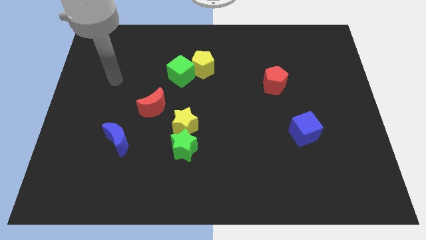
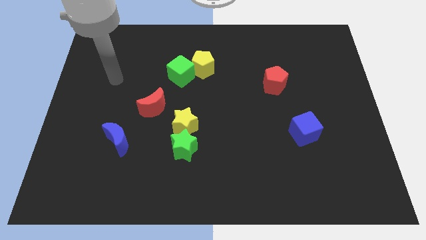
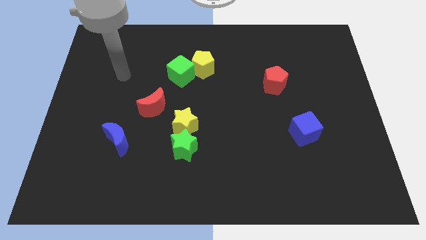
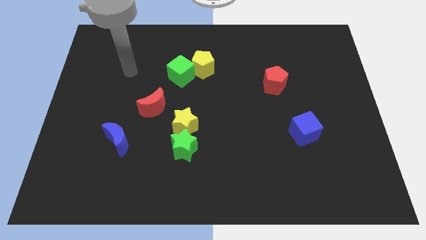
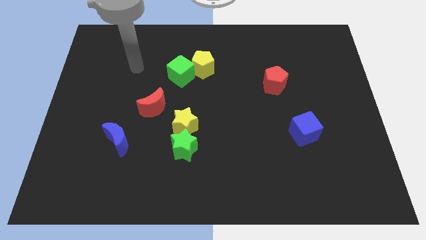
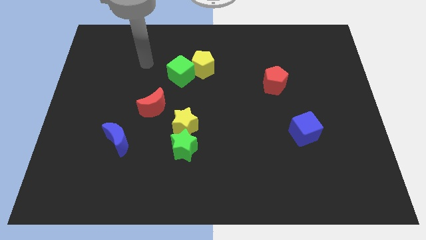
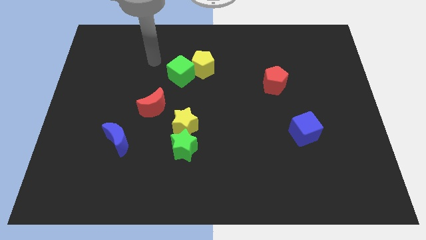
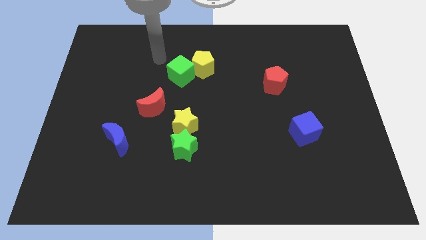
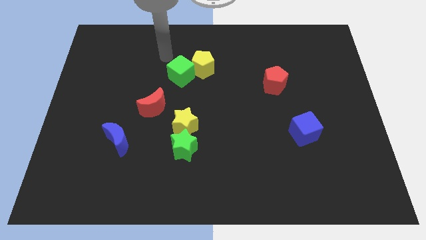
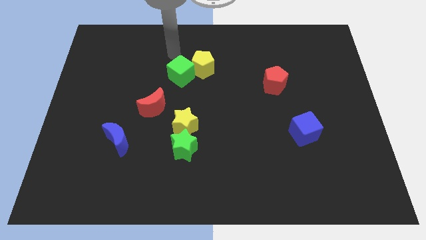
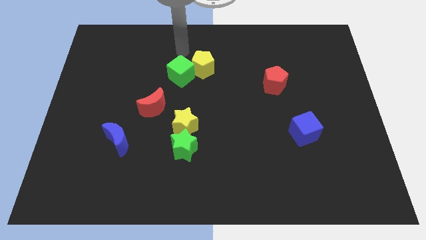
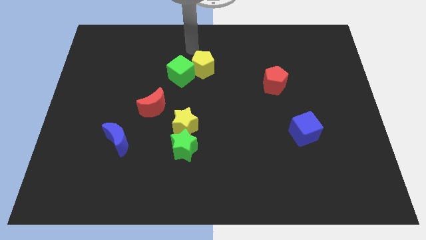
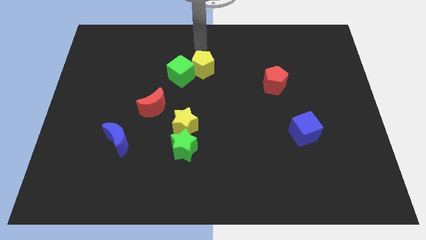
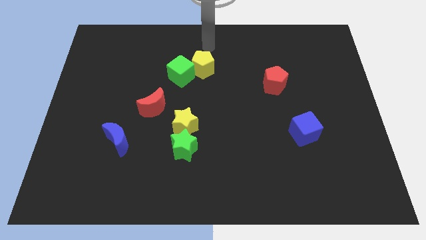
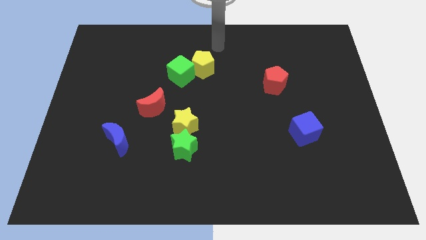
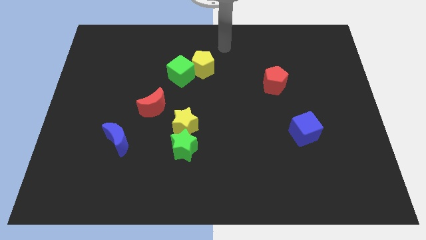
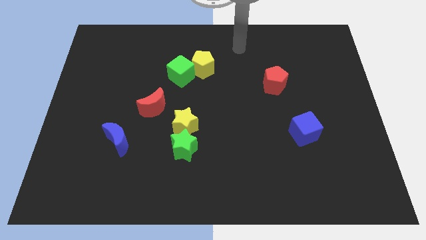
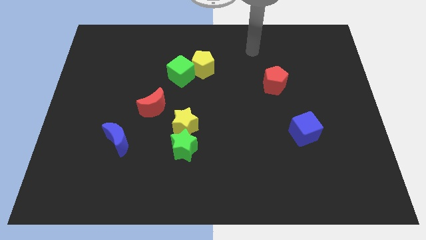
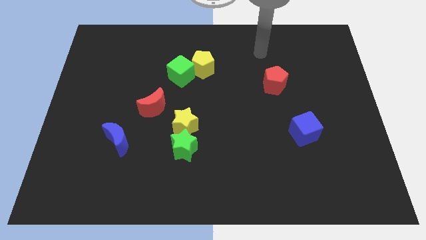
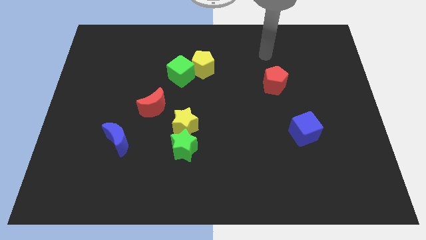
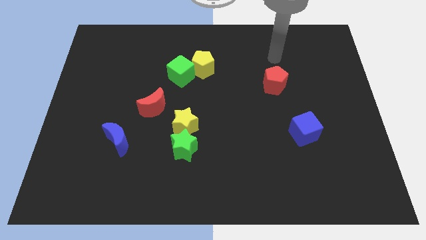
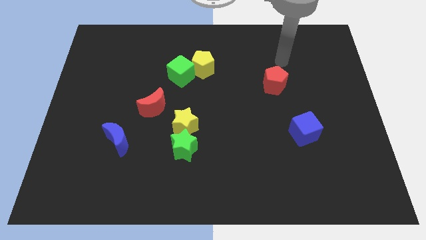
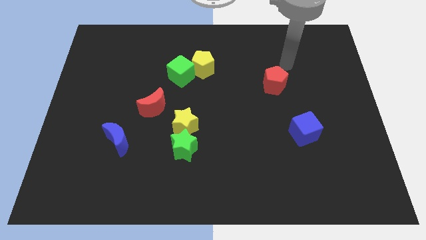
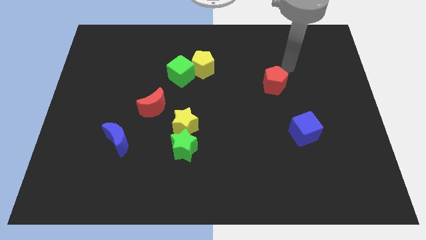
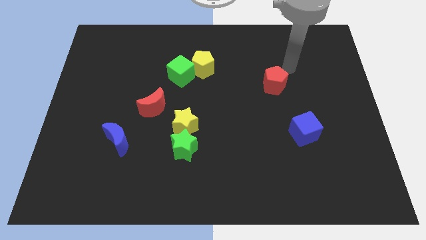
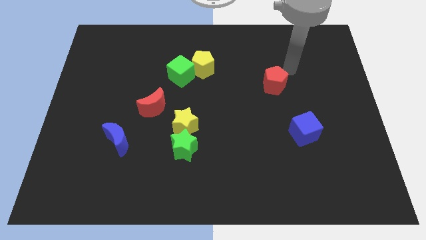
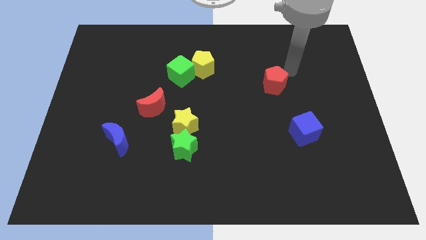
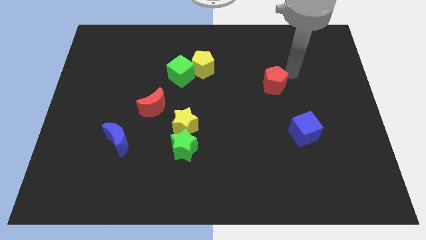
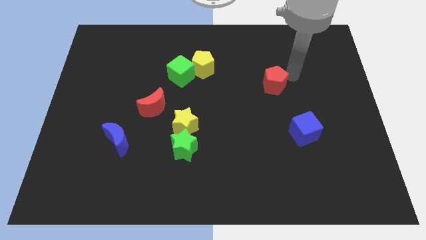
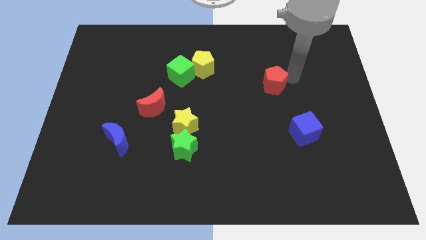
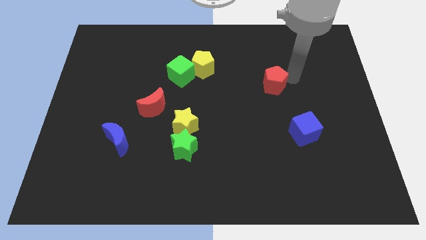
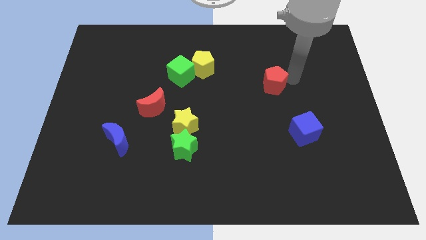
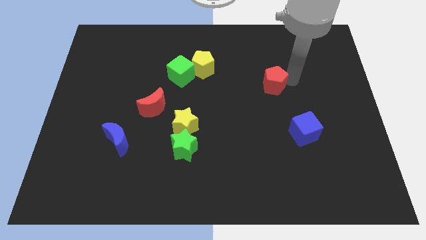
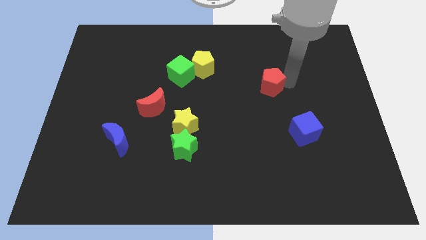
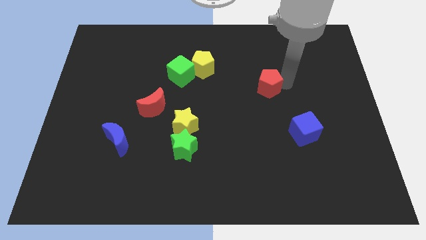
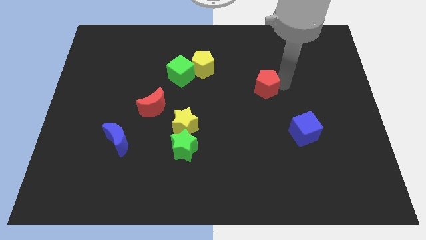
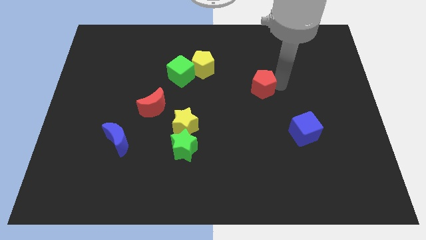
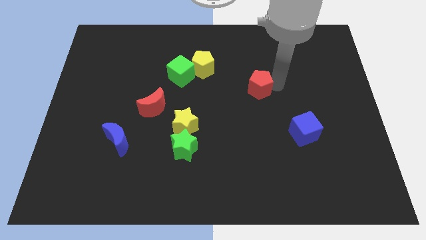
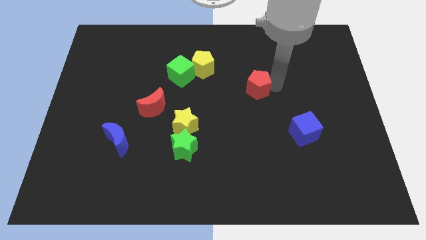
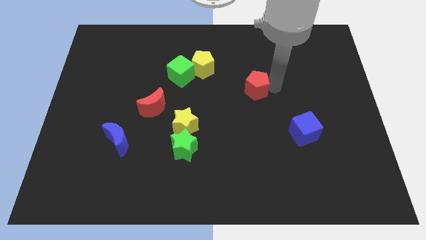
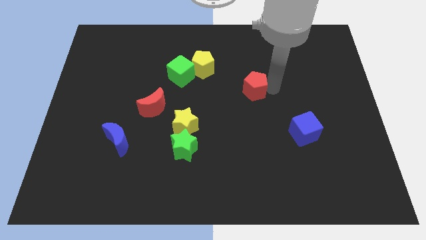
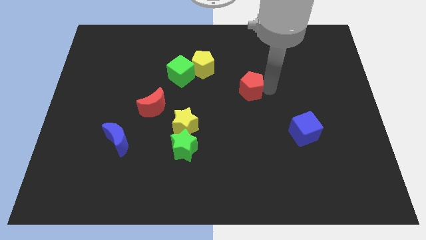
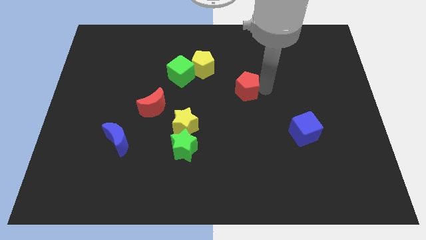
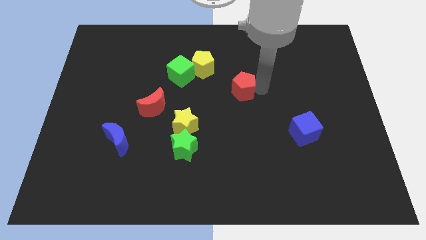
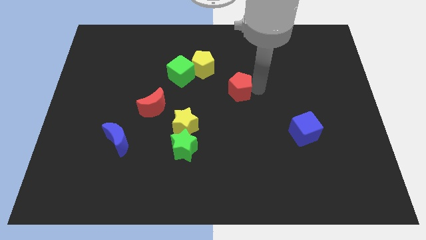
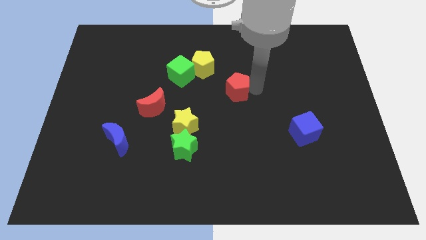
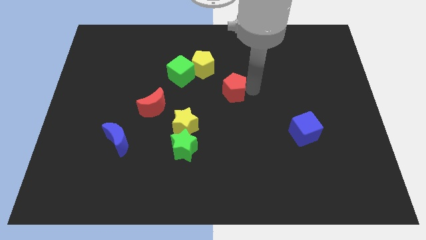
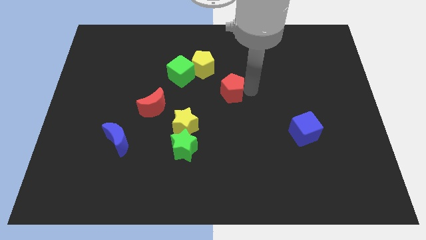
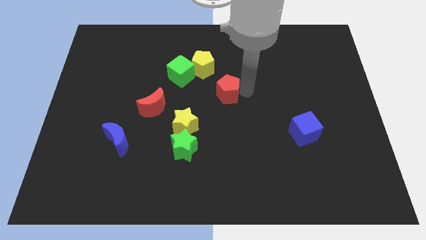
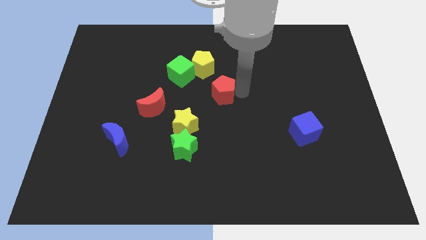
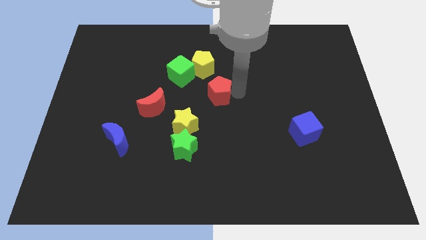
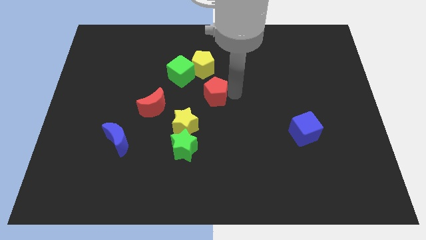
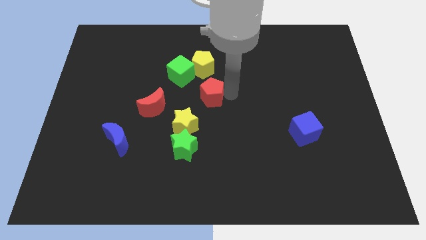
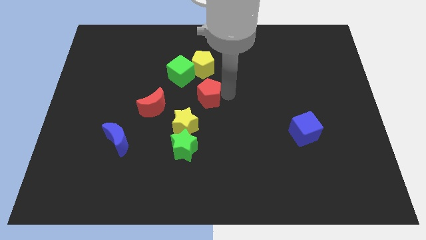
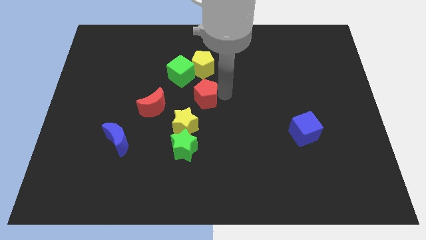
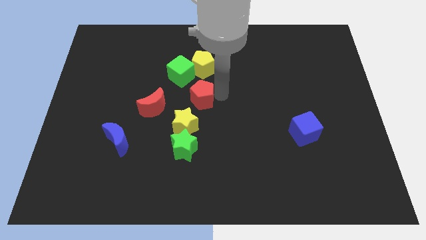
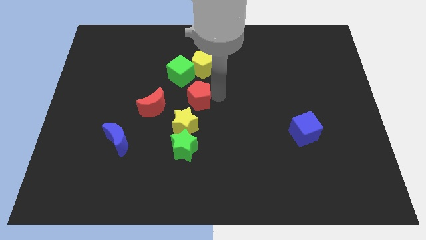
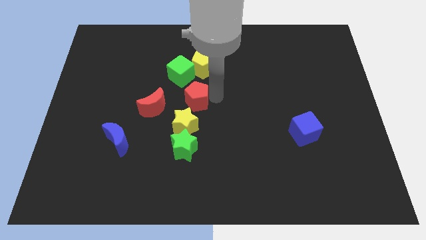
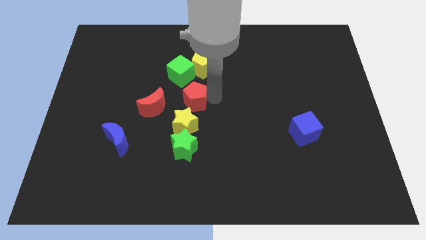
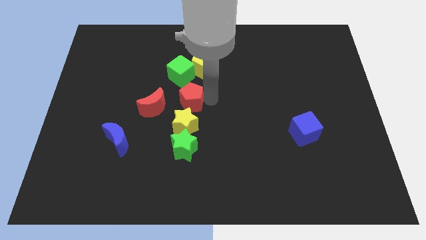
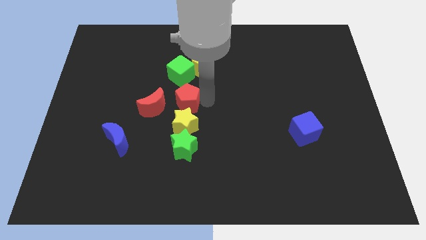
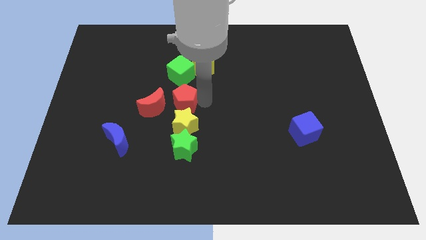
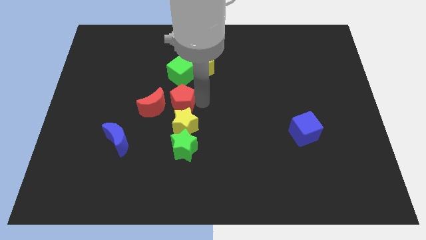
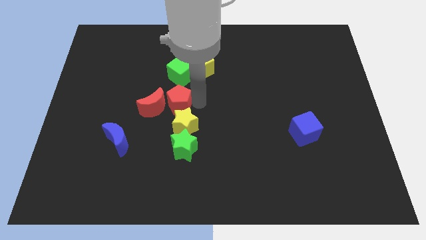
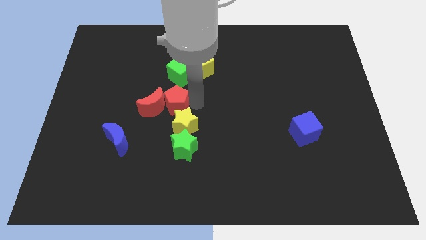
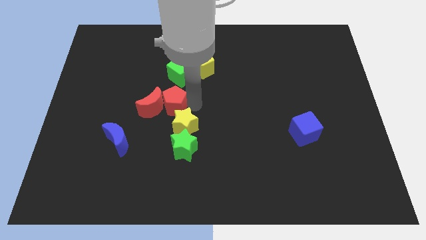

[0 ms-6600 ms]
move the red pentagon close to the red moon

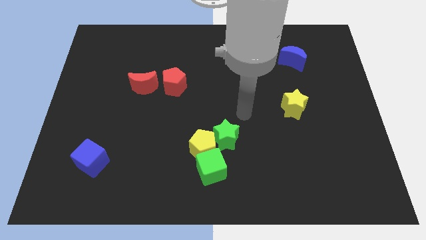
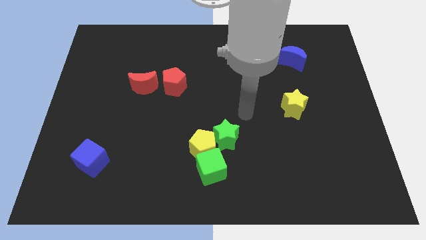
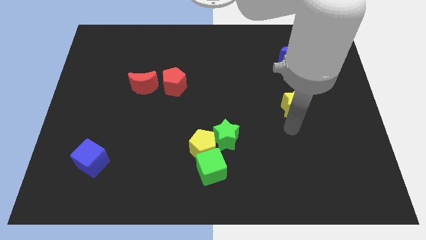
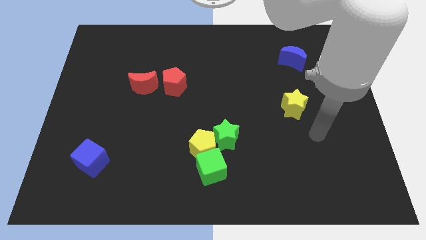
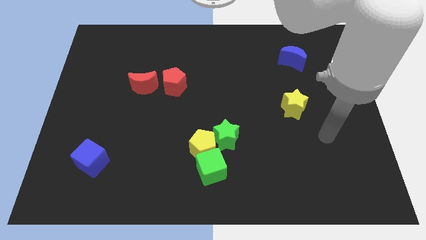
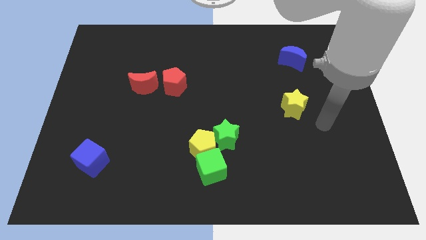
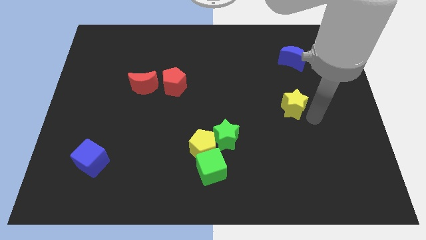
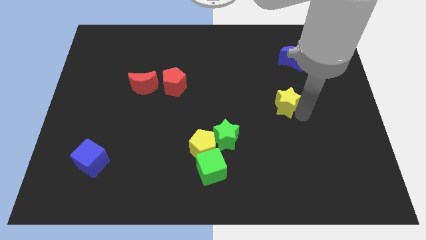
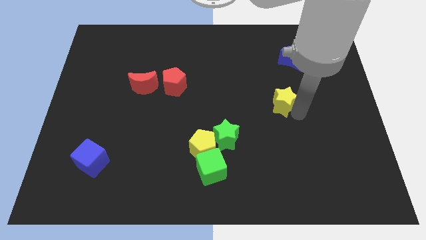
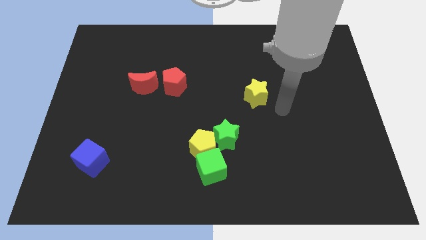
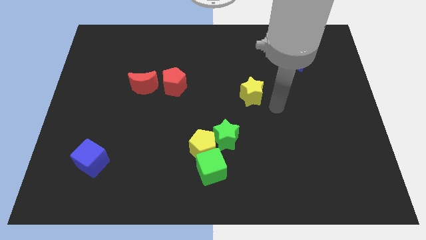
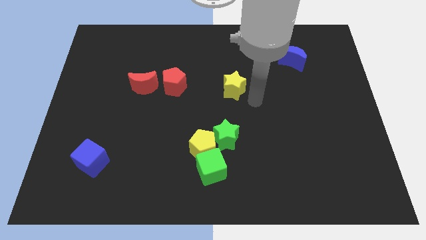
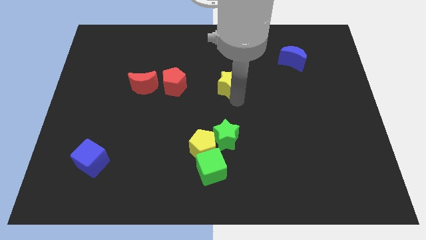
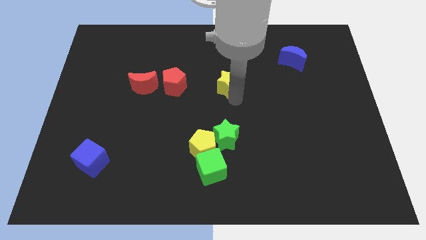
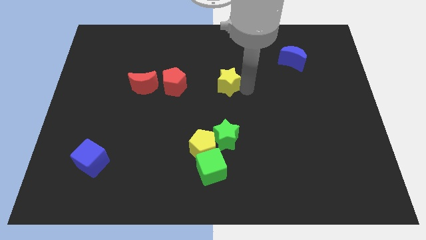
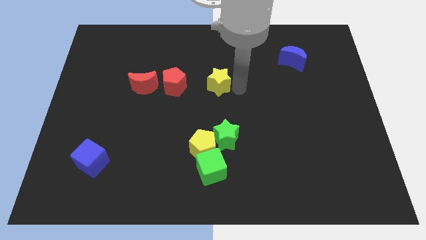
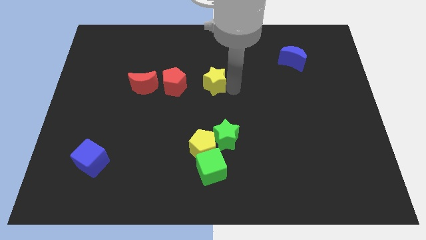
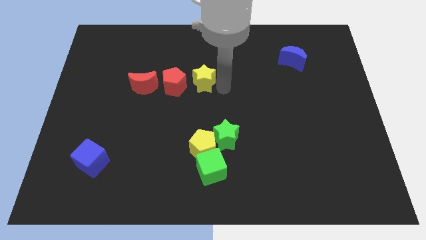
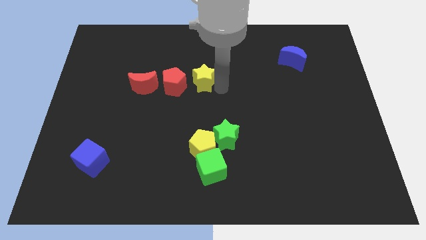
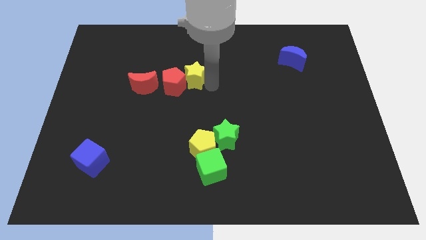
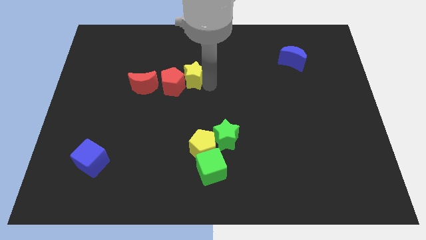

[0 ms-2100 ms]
push the yellow star close to the red pentagon
